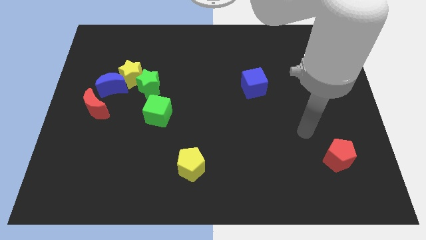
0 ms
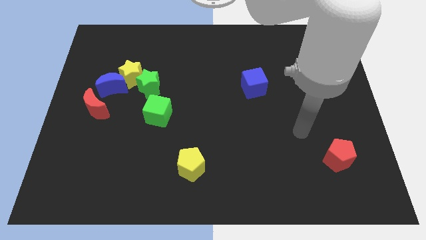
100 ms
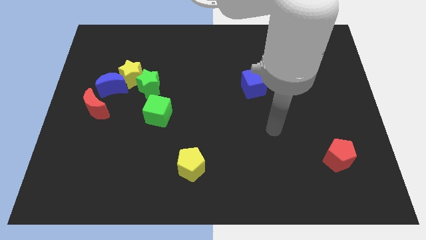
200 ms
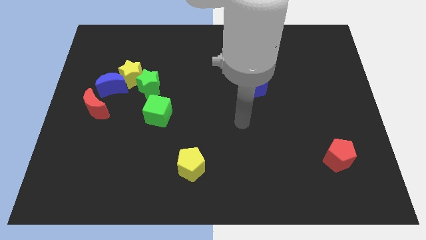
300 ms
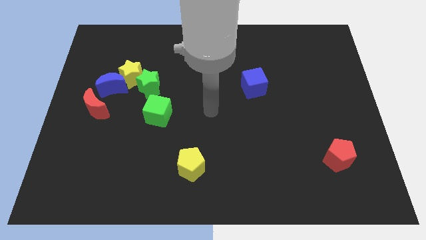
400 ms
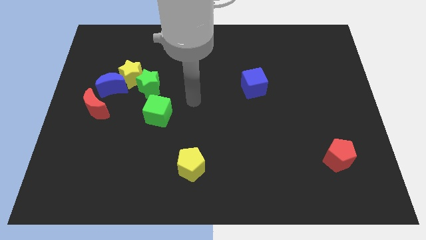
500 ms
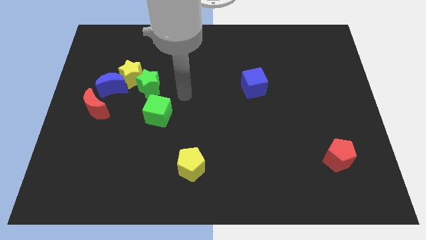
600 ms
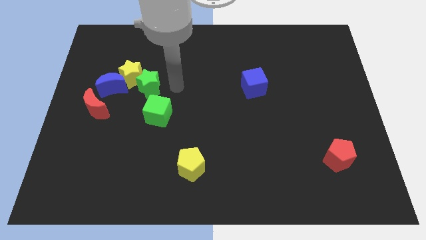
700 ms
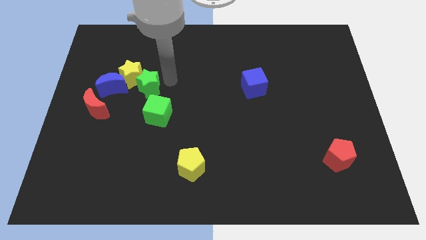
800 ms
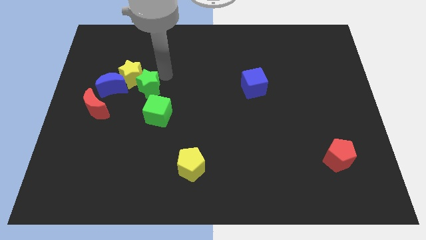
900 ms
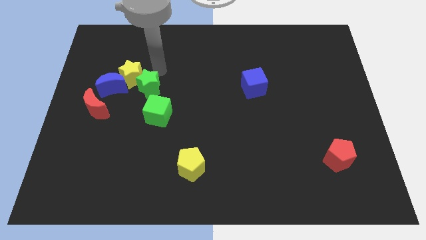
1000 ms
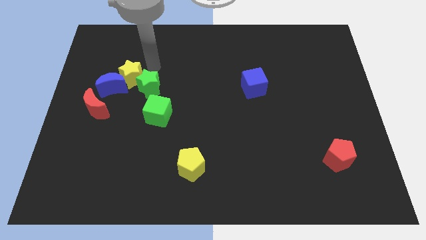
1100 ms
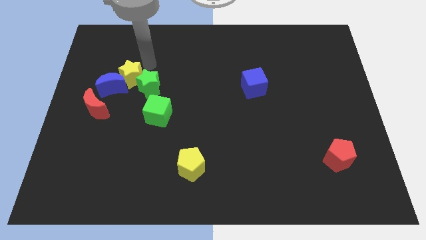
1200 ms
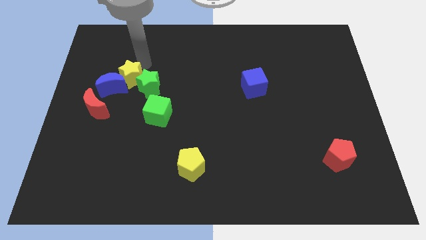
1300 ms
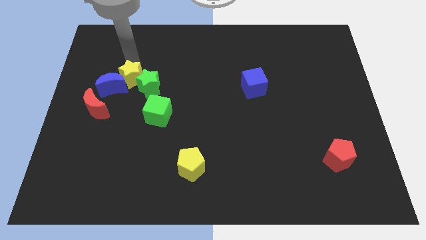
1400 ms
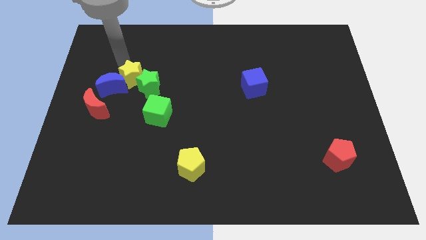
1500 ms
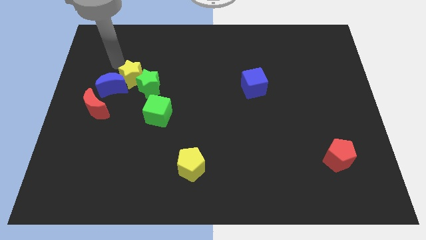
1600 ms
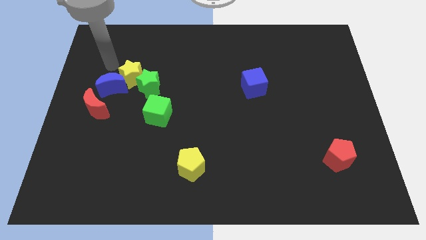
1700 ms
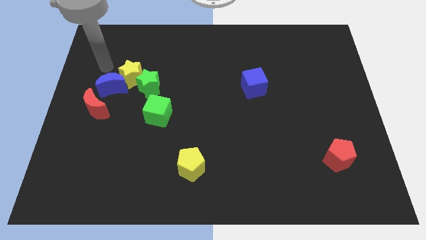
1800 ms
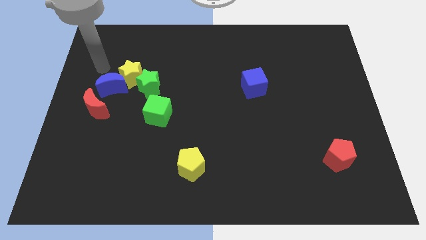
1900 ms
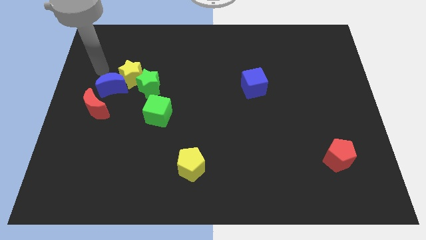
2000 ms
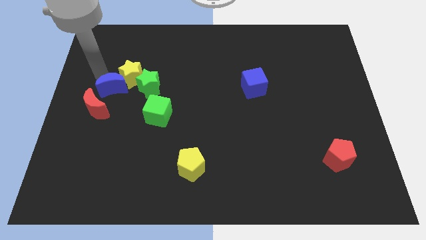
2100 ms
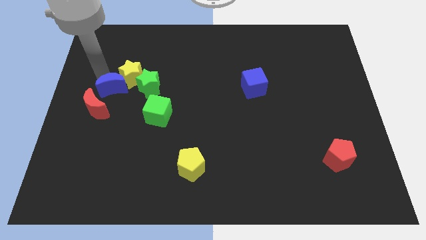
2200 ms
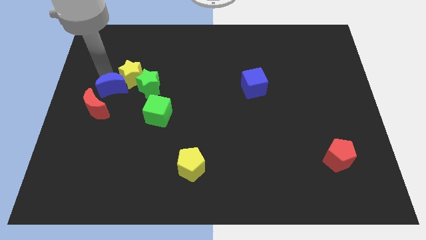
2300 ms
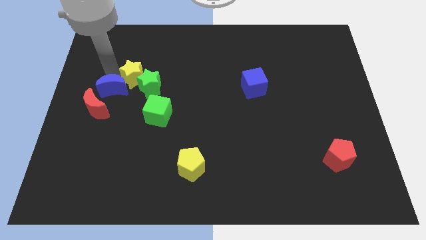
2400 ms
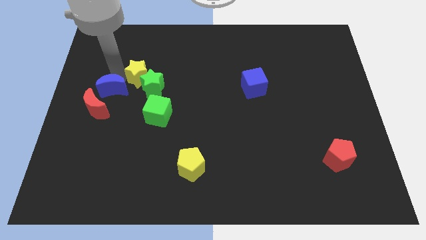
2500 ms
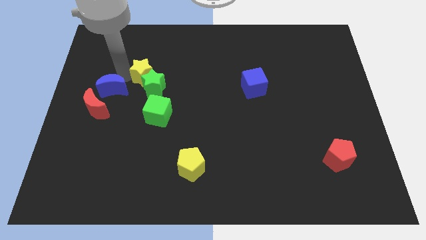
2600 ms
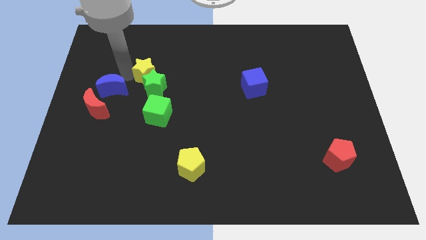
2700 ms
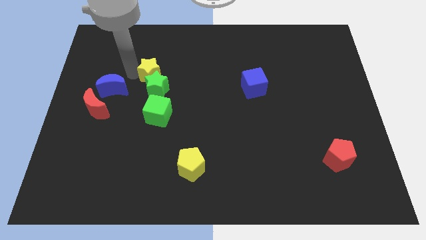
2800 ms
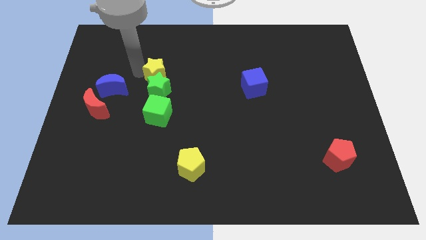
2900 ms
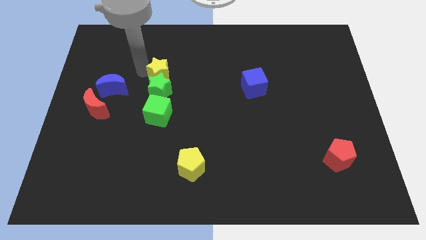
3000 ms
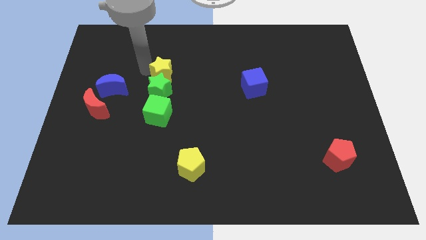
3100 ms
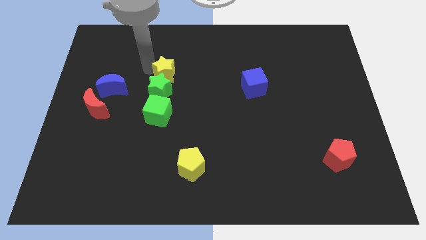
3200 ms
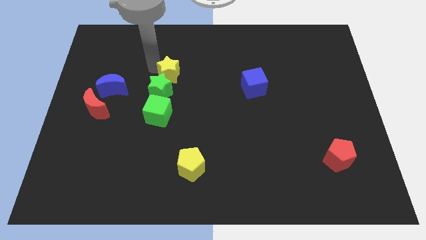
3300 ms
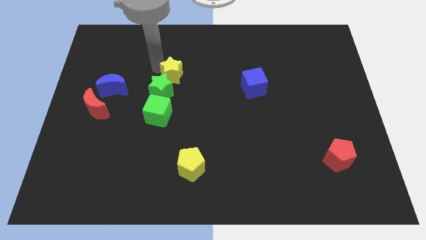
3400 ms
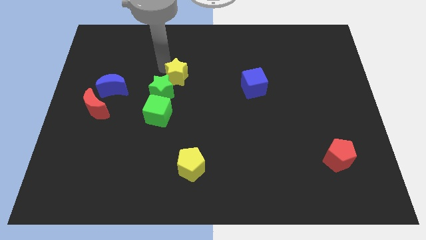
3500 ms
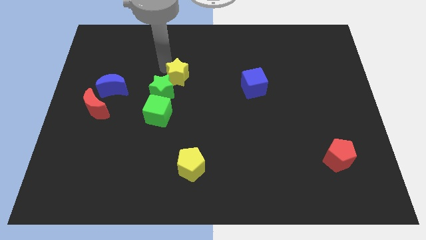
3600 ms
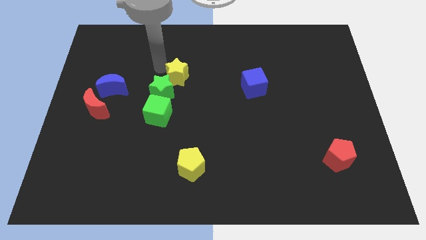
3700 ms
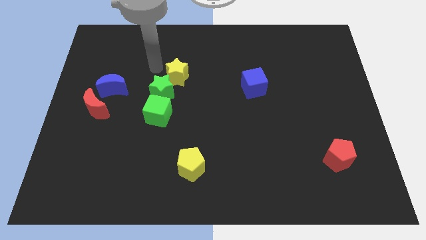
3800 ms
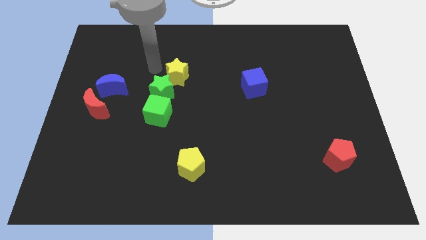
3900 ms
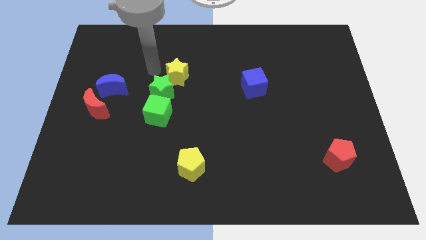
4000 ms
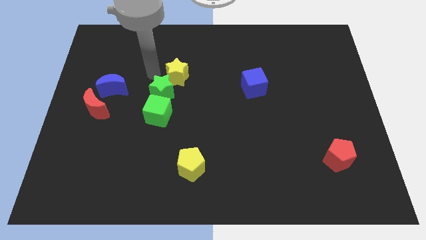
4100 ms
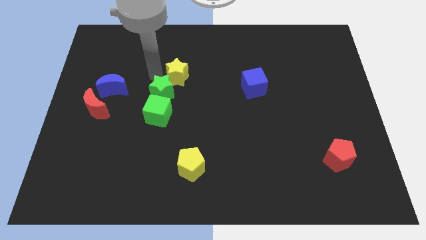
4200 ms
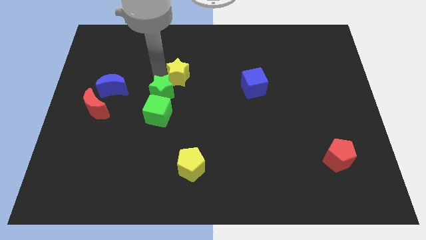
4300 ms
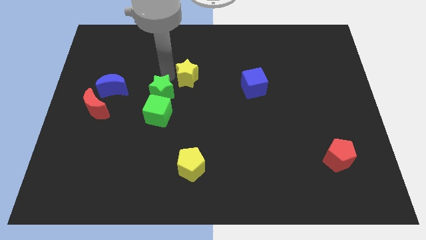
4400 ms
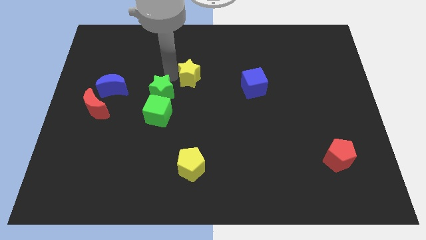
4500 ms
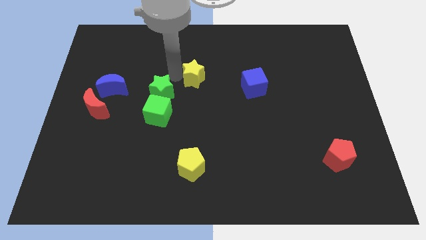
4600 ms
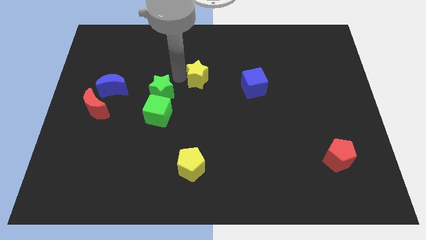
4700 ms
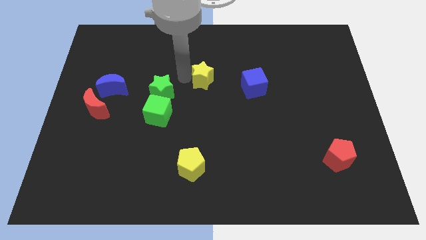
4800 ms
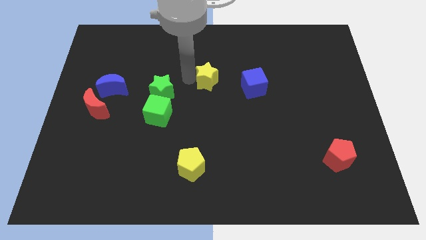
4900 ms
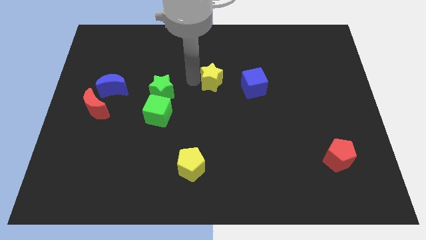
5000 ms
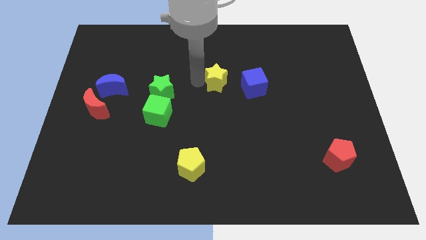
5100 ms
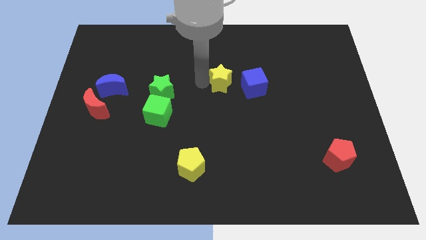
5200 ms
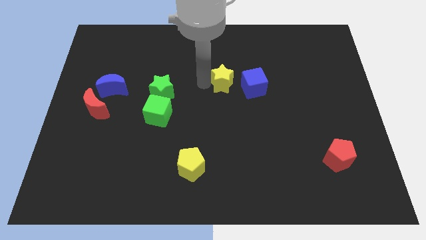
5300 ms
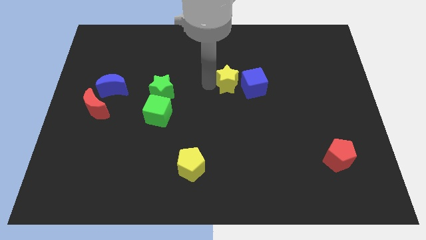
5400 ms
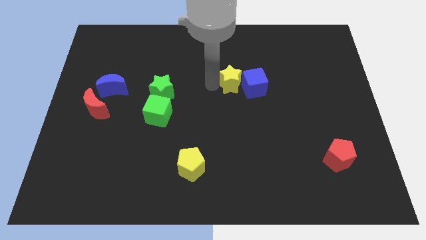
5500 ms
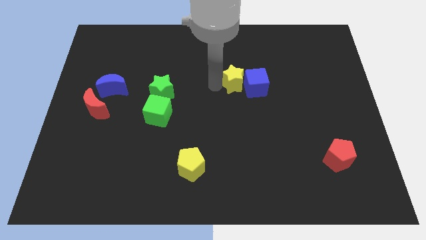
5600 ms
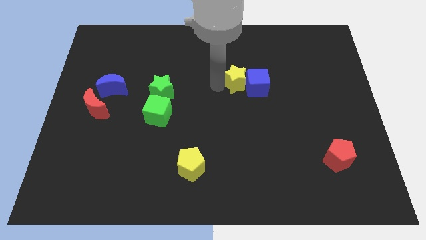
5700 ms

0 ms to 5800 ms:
put the yellow star close to the blue cube

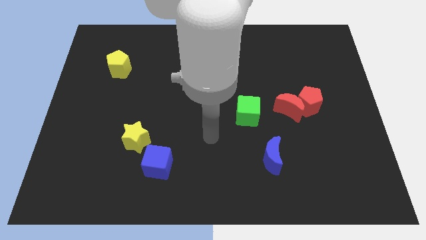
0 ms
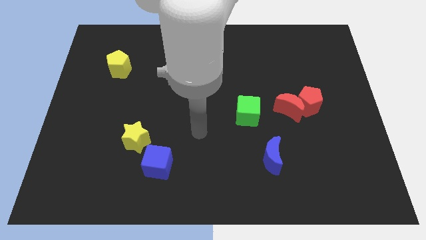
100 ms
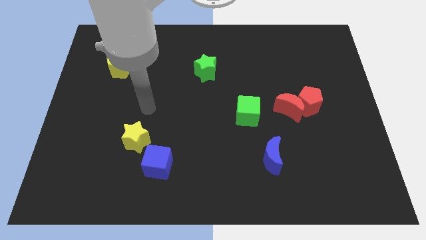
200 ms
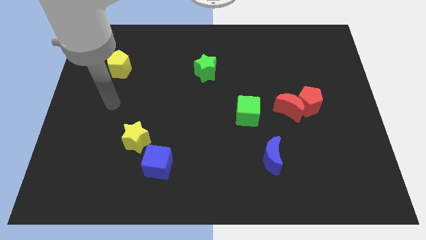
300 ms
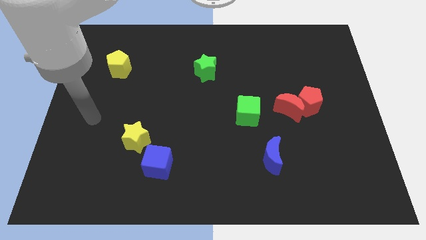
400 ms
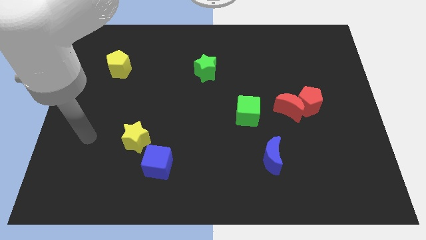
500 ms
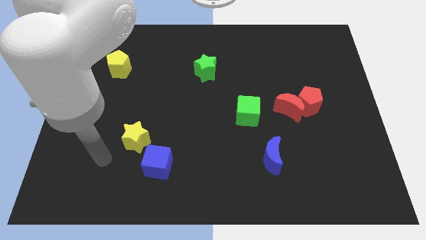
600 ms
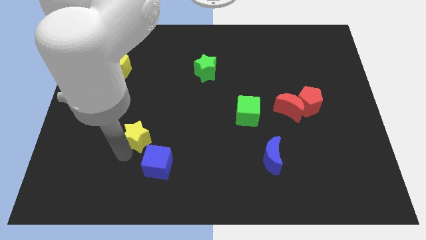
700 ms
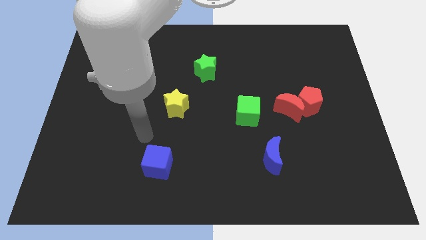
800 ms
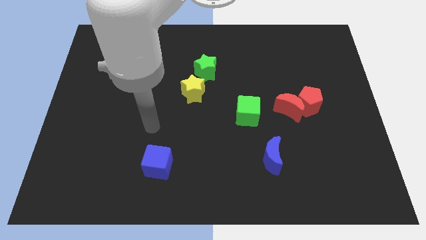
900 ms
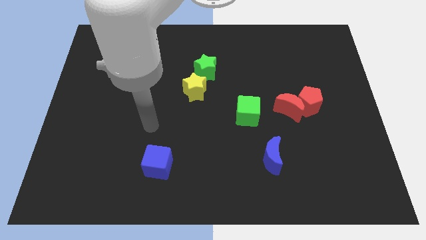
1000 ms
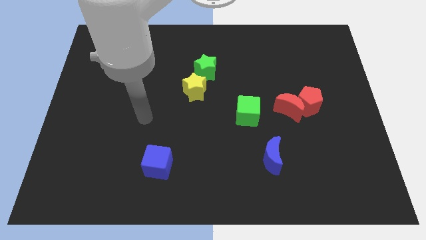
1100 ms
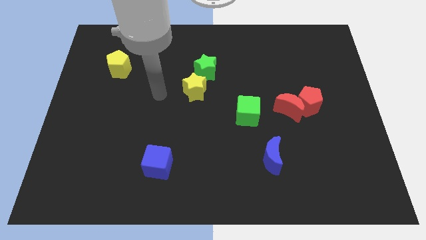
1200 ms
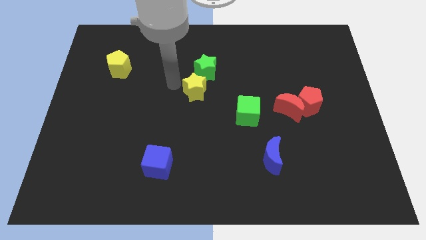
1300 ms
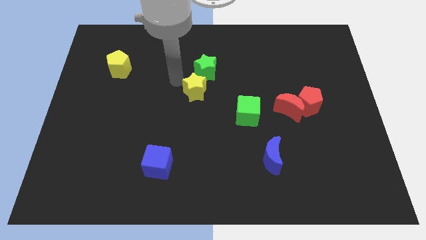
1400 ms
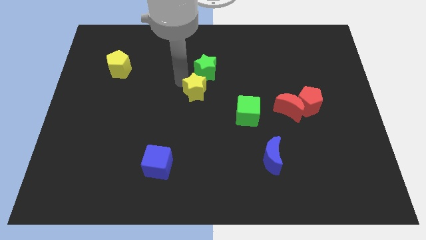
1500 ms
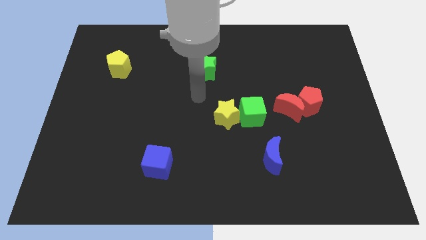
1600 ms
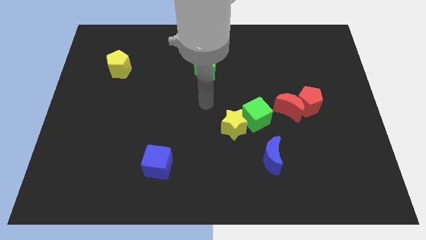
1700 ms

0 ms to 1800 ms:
slide the yellow star next to the green cube

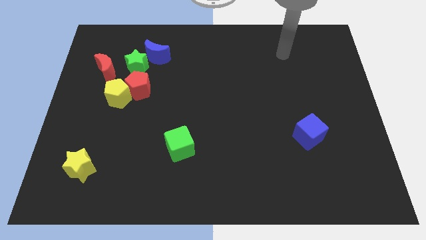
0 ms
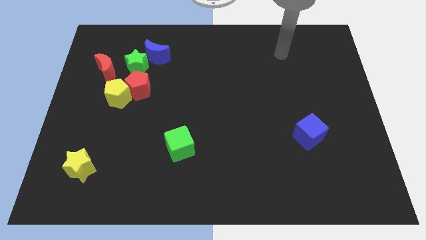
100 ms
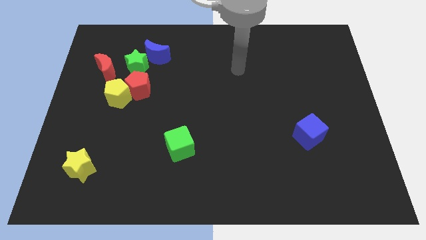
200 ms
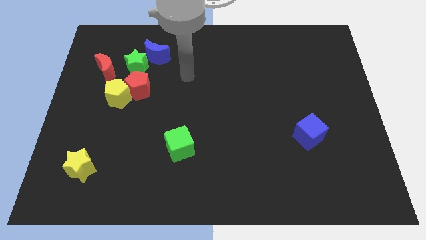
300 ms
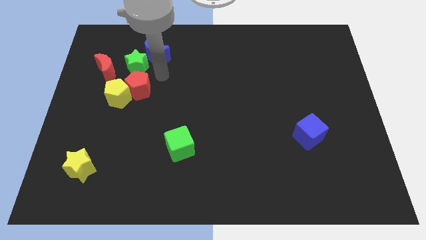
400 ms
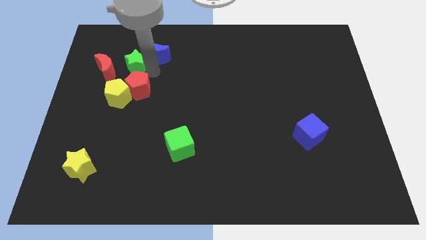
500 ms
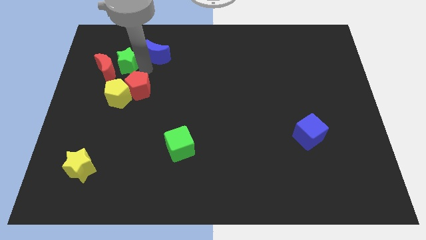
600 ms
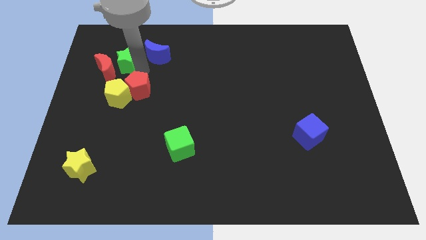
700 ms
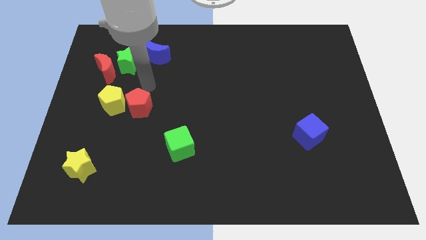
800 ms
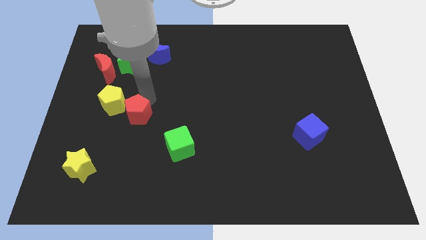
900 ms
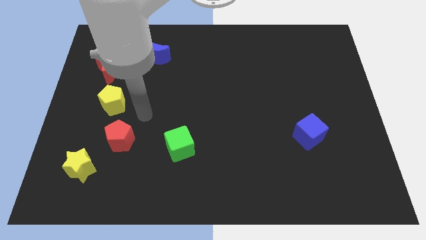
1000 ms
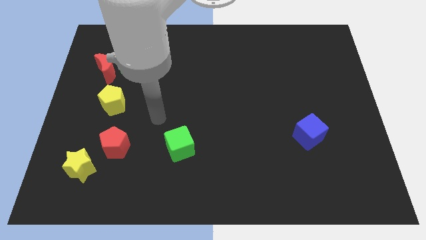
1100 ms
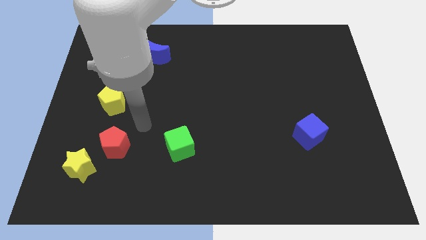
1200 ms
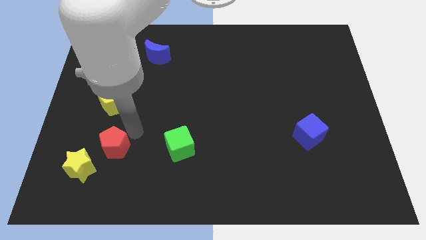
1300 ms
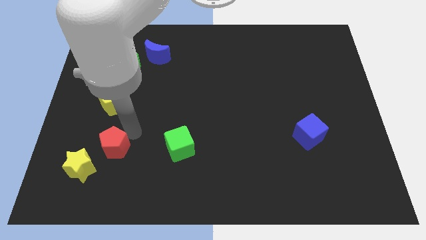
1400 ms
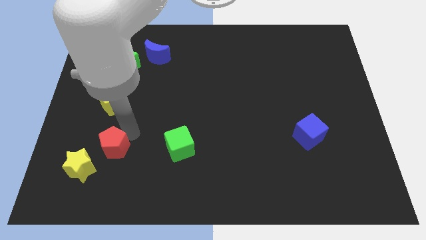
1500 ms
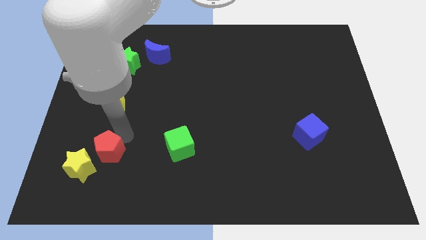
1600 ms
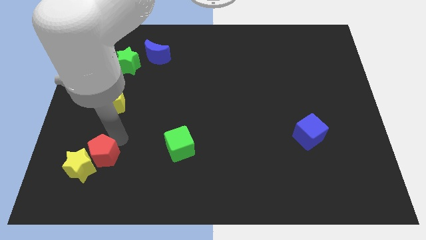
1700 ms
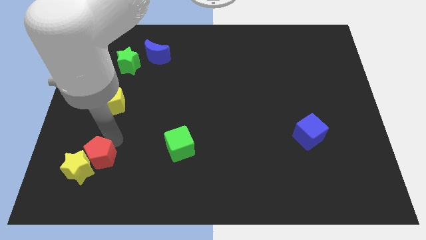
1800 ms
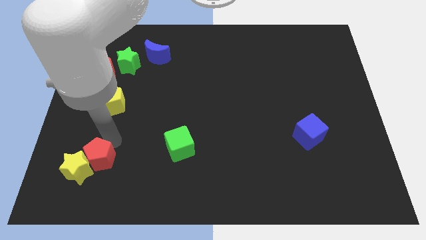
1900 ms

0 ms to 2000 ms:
slide the red pentagon close to the yellow star
